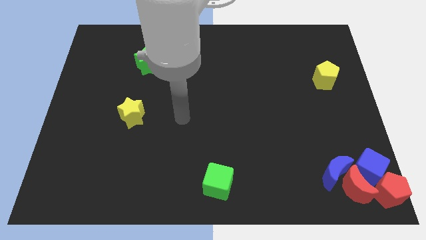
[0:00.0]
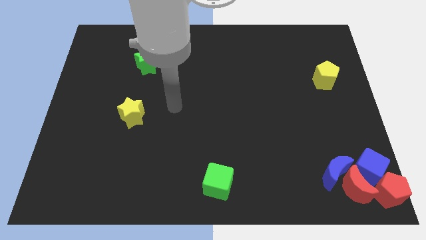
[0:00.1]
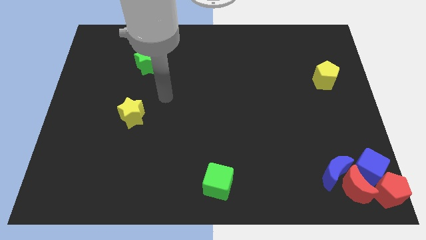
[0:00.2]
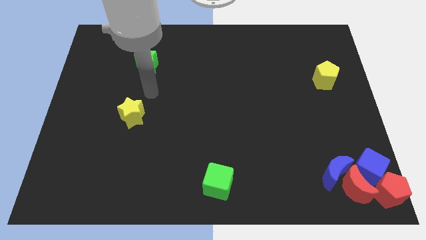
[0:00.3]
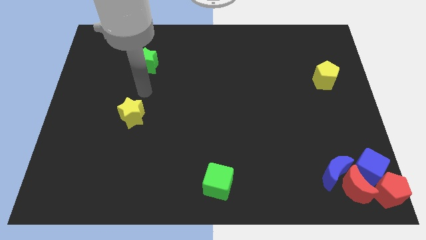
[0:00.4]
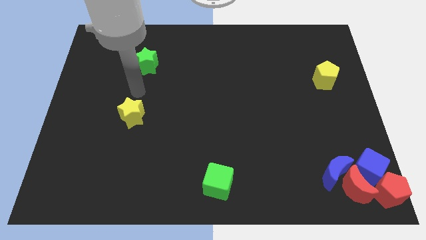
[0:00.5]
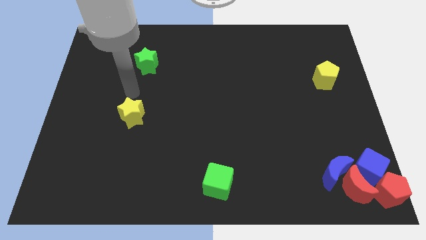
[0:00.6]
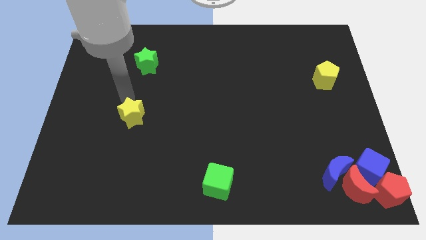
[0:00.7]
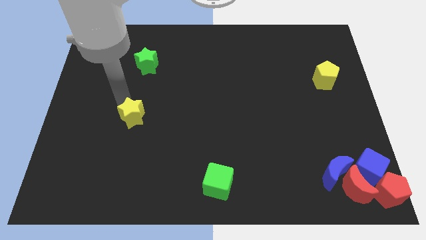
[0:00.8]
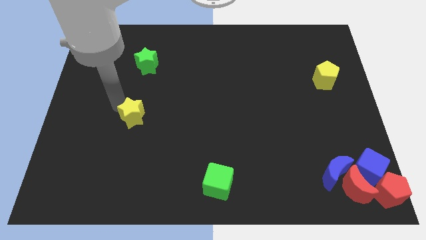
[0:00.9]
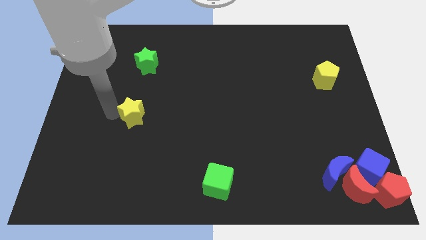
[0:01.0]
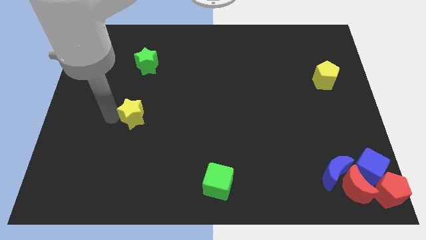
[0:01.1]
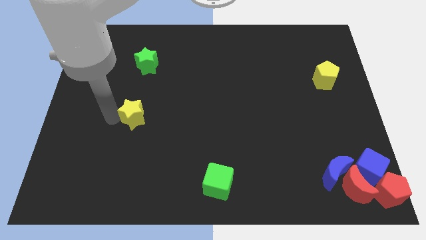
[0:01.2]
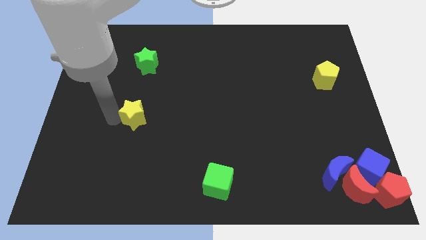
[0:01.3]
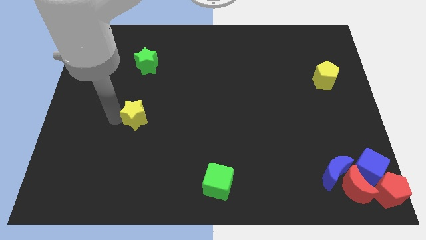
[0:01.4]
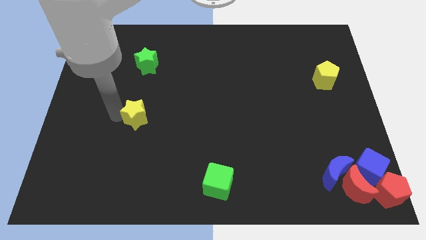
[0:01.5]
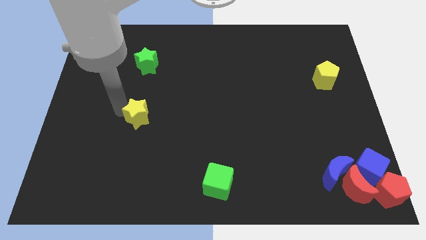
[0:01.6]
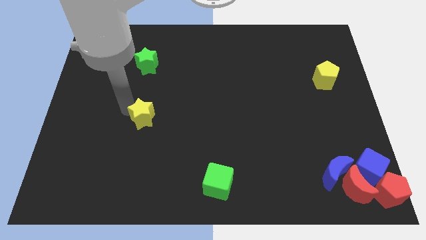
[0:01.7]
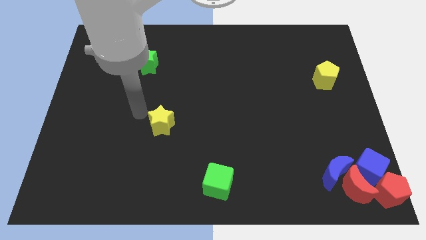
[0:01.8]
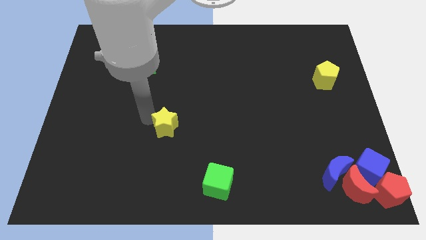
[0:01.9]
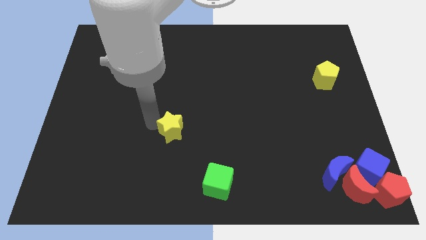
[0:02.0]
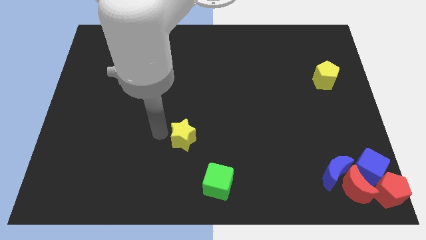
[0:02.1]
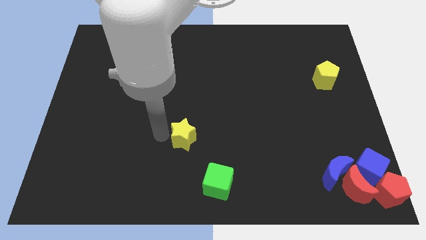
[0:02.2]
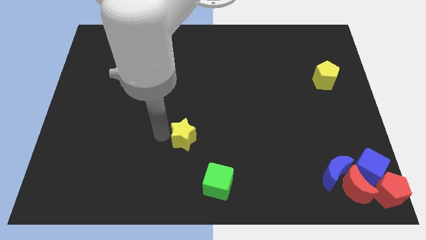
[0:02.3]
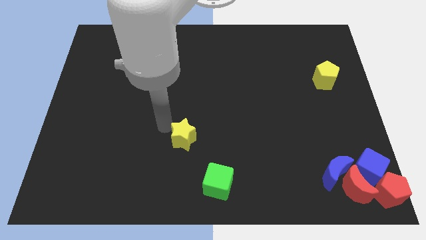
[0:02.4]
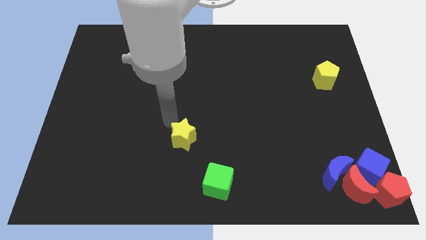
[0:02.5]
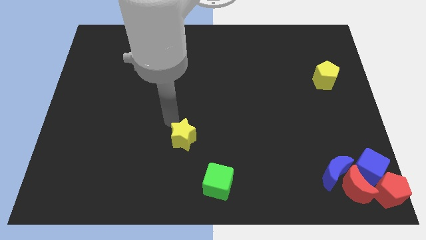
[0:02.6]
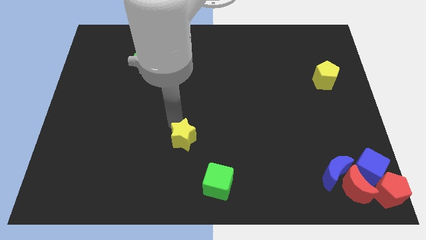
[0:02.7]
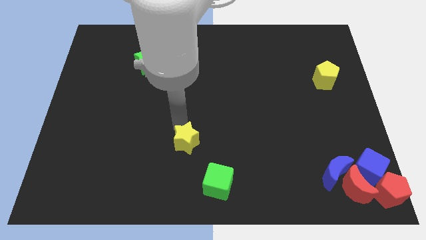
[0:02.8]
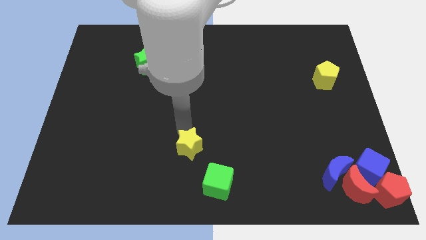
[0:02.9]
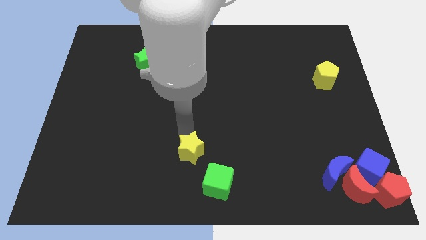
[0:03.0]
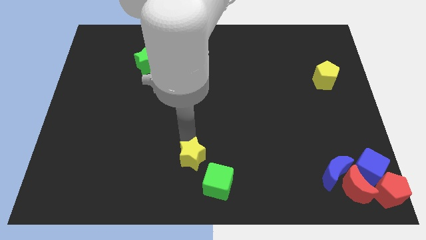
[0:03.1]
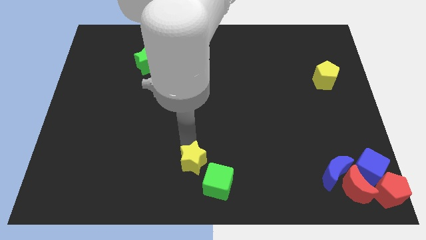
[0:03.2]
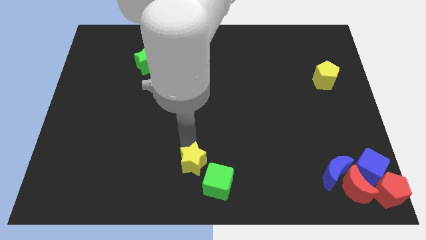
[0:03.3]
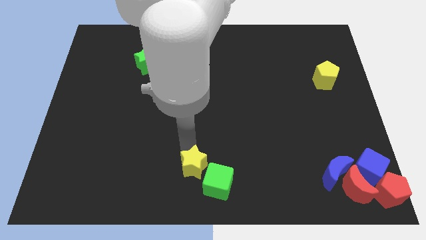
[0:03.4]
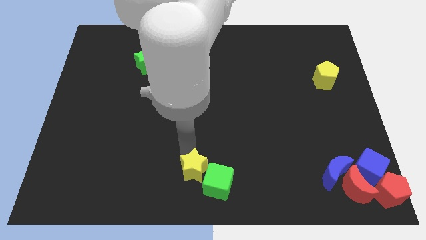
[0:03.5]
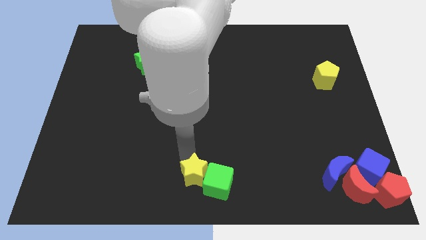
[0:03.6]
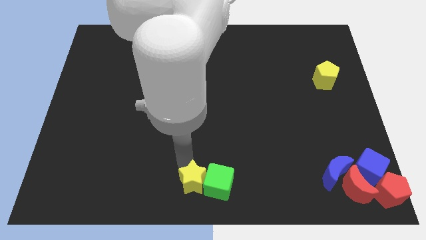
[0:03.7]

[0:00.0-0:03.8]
move the yellow star into the left side of the green cube

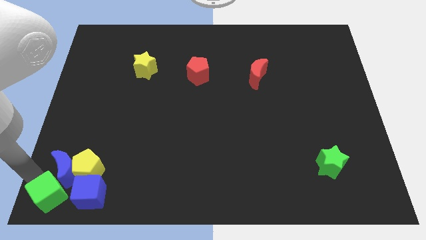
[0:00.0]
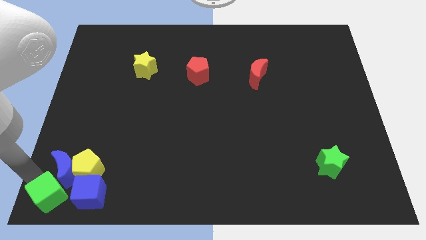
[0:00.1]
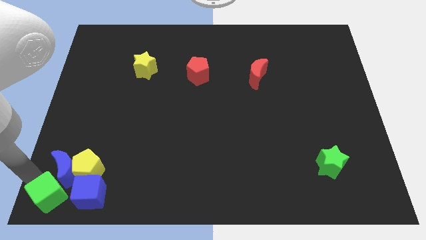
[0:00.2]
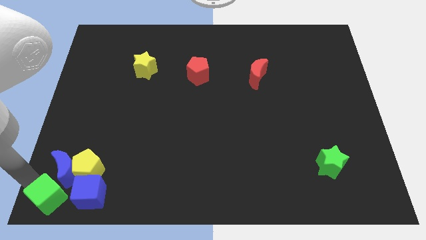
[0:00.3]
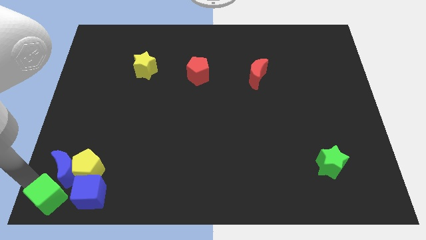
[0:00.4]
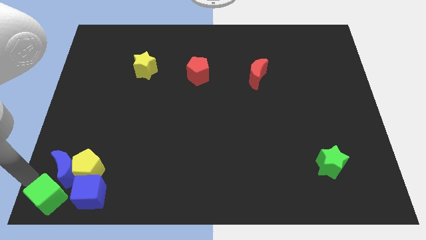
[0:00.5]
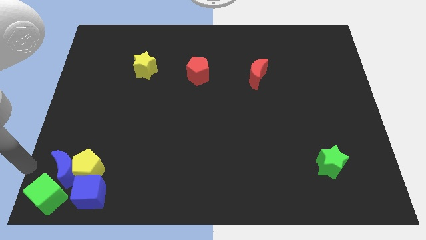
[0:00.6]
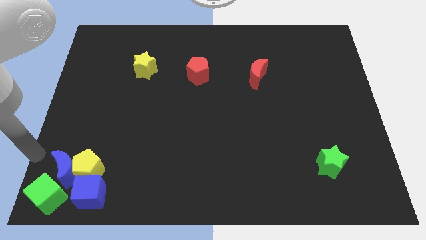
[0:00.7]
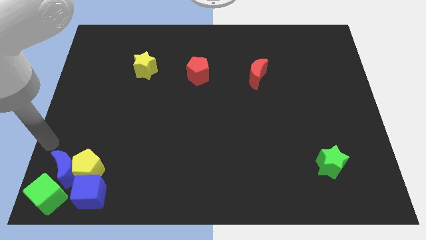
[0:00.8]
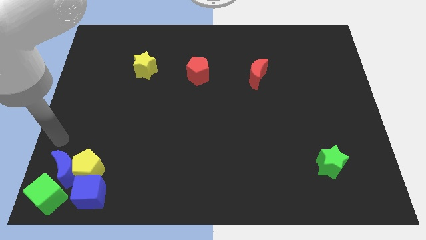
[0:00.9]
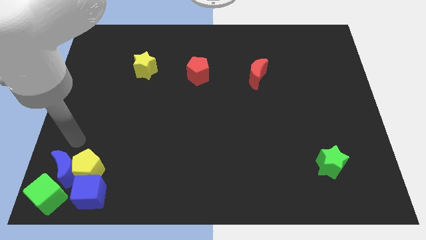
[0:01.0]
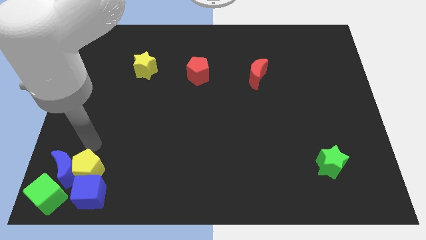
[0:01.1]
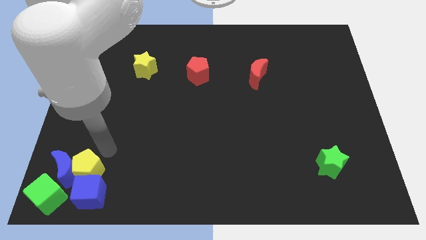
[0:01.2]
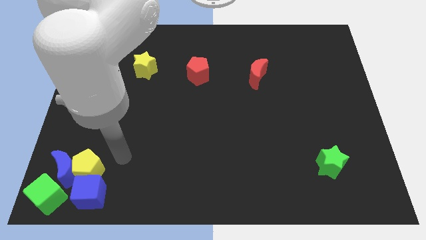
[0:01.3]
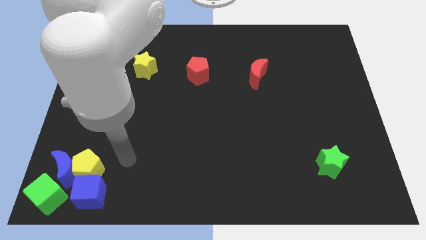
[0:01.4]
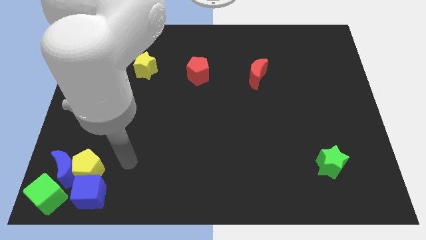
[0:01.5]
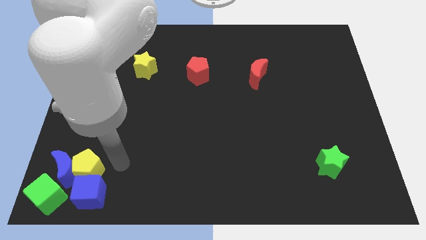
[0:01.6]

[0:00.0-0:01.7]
move the arm away from the green cube

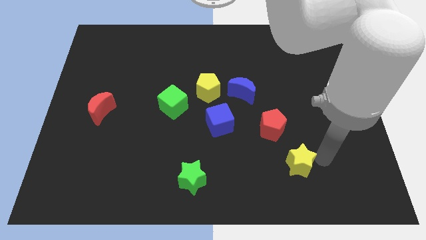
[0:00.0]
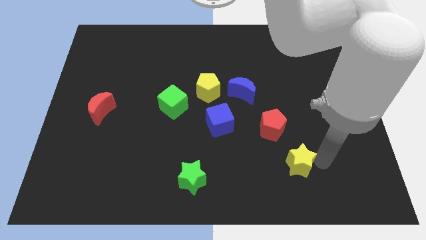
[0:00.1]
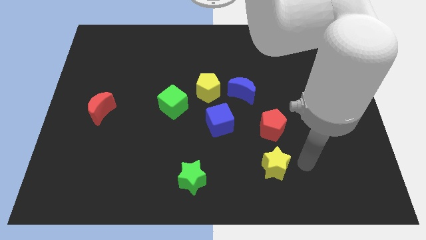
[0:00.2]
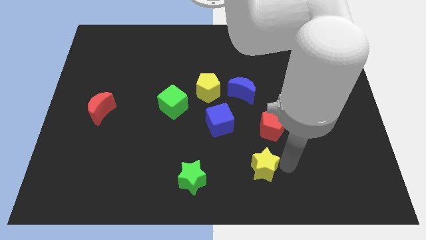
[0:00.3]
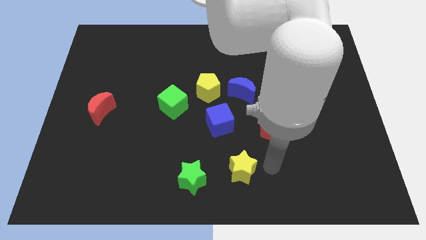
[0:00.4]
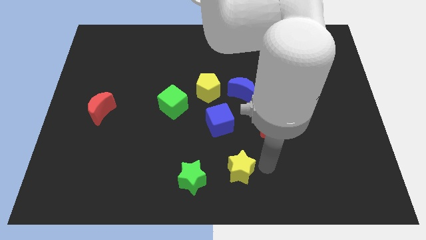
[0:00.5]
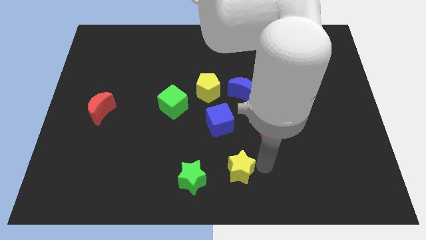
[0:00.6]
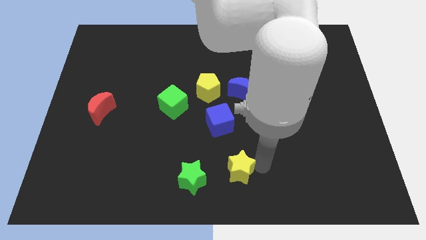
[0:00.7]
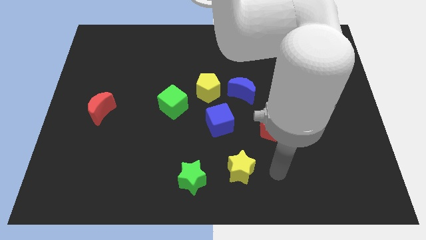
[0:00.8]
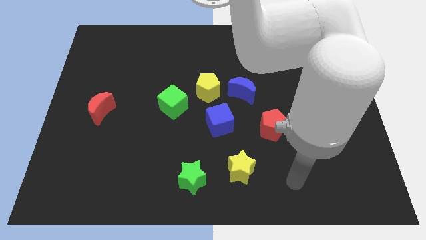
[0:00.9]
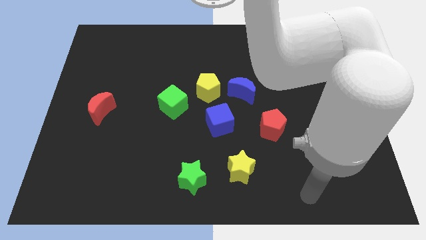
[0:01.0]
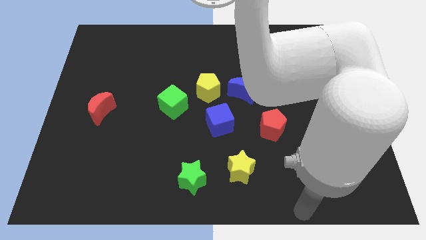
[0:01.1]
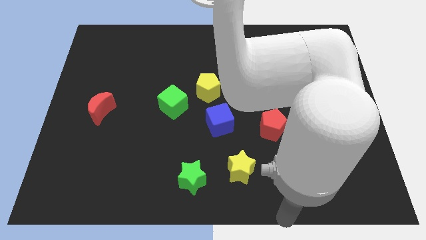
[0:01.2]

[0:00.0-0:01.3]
move the yellow star slightly towards the right side of green star

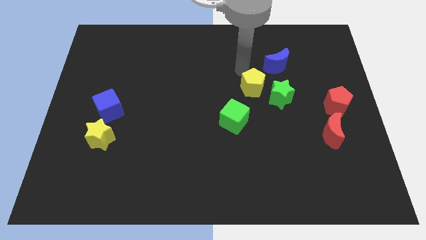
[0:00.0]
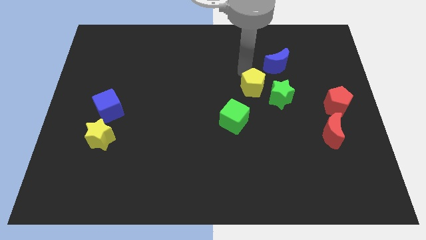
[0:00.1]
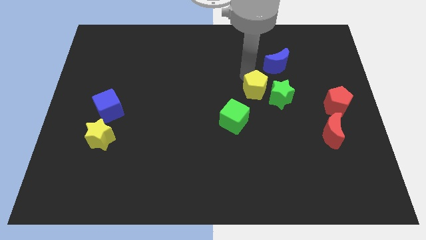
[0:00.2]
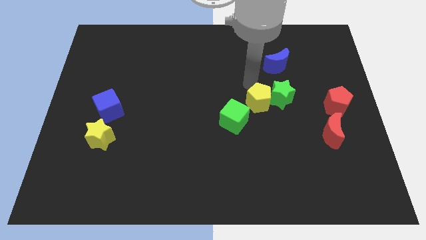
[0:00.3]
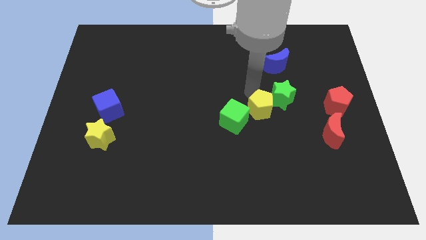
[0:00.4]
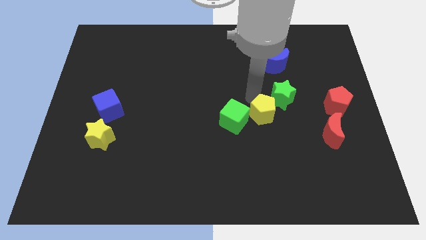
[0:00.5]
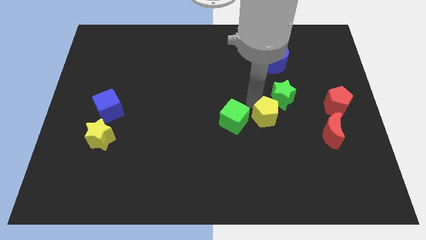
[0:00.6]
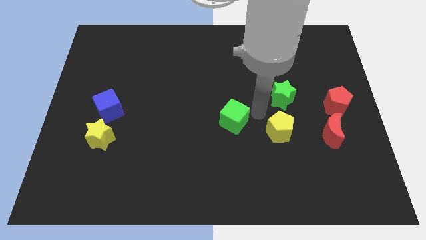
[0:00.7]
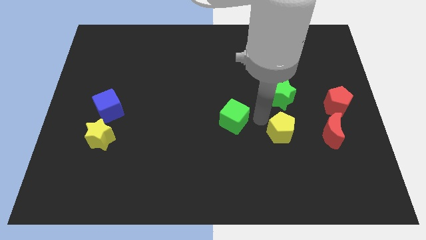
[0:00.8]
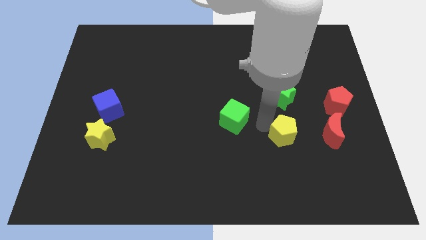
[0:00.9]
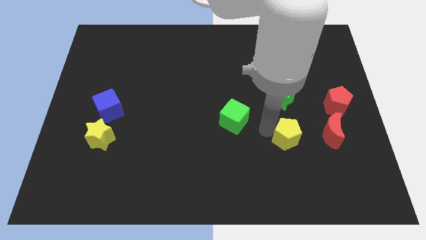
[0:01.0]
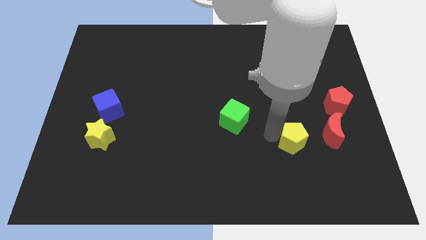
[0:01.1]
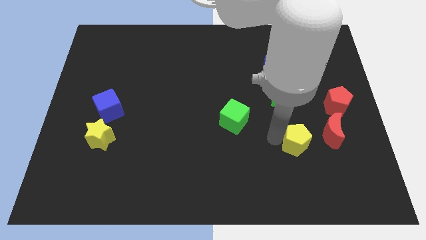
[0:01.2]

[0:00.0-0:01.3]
move the yellow pentagon to the left of the red moon

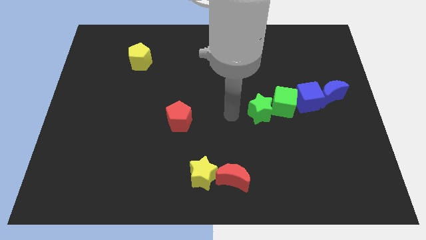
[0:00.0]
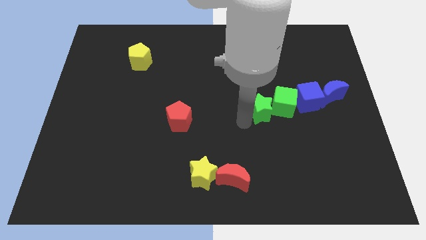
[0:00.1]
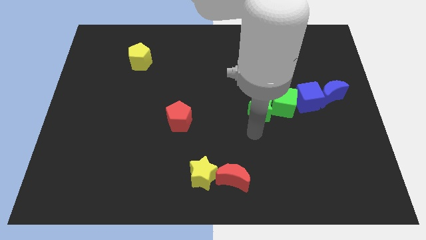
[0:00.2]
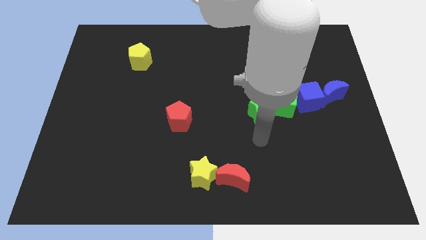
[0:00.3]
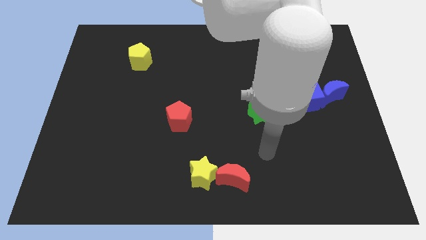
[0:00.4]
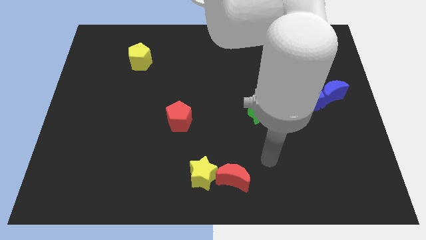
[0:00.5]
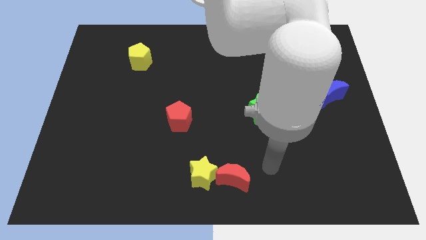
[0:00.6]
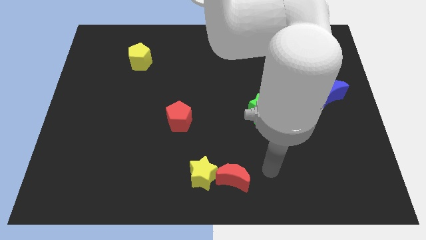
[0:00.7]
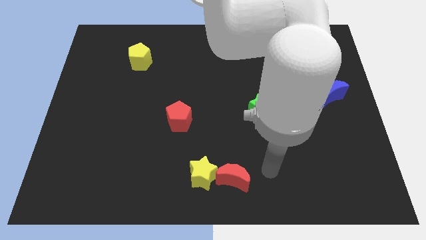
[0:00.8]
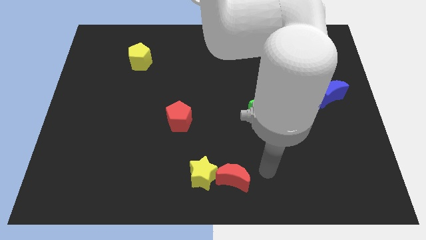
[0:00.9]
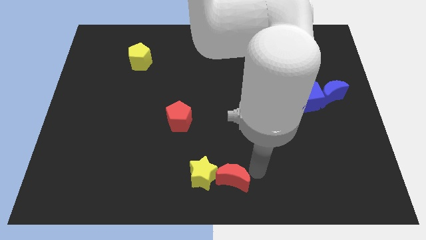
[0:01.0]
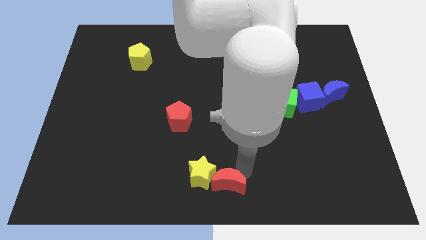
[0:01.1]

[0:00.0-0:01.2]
move your arm close to the red moon
